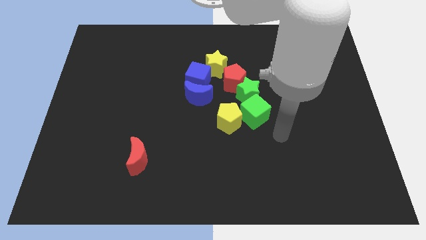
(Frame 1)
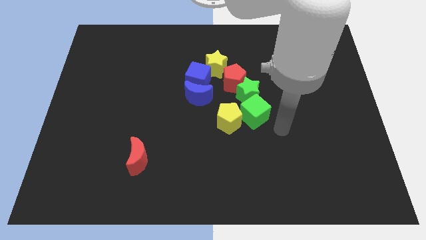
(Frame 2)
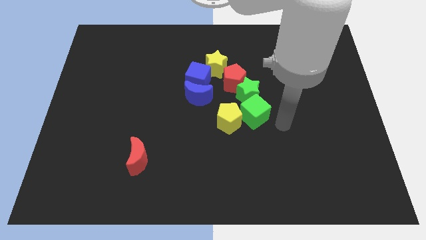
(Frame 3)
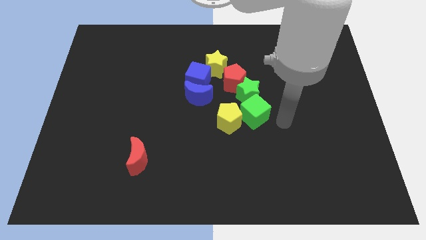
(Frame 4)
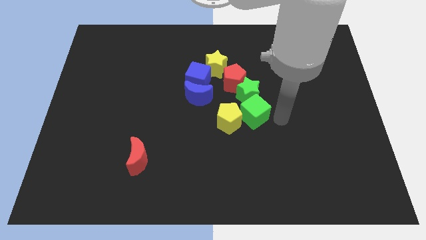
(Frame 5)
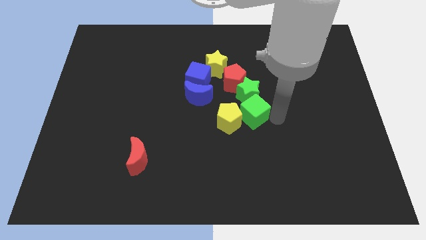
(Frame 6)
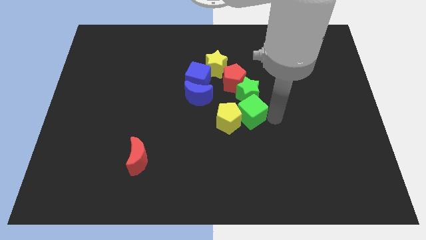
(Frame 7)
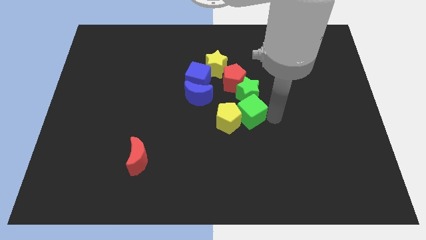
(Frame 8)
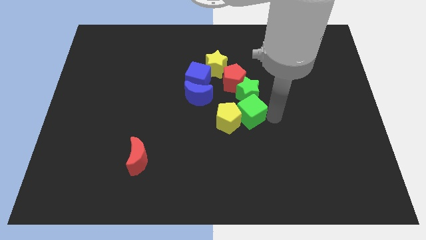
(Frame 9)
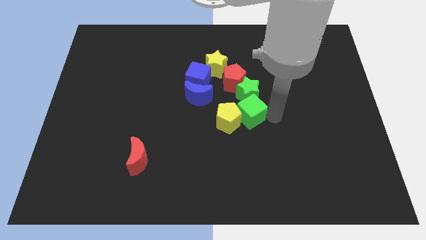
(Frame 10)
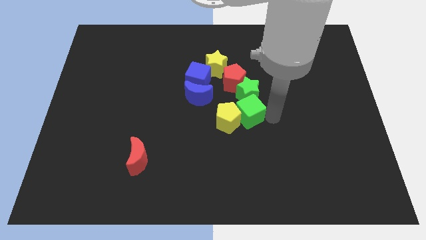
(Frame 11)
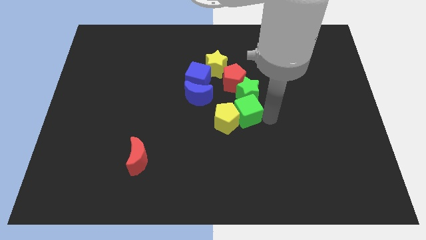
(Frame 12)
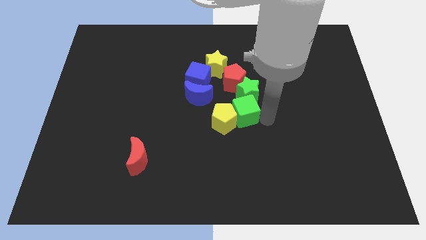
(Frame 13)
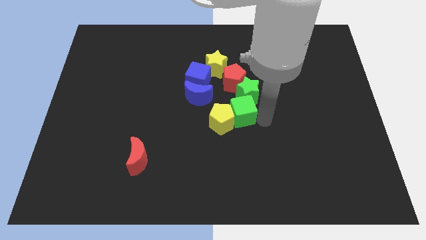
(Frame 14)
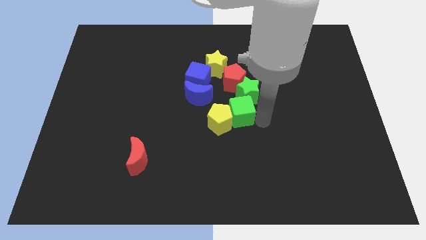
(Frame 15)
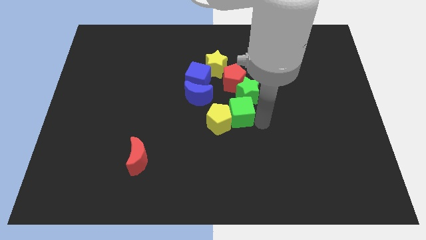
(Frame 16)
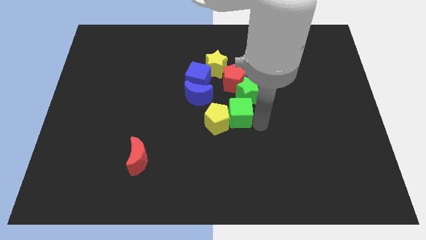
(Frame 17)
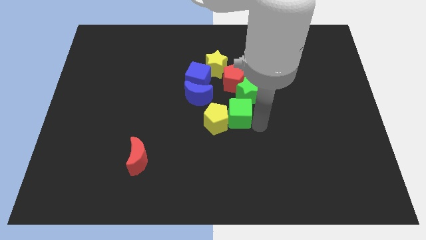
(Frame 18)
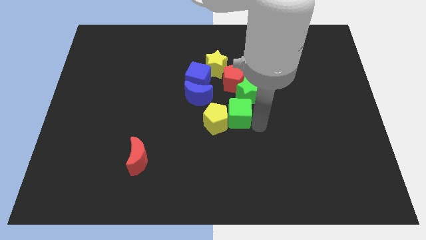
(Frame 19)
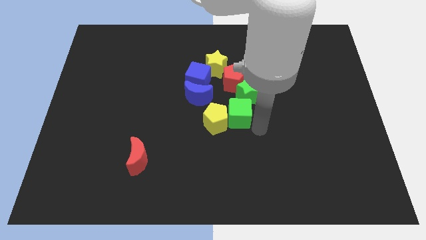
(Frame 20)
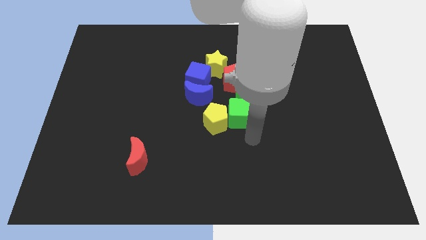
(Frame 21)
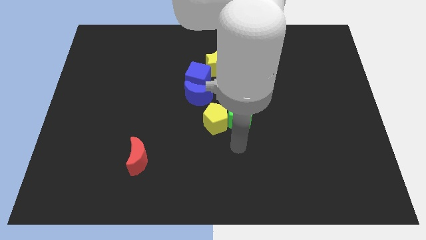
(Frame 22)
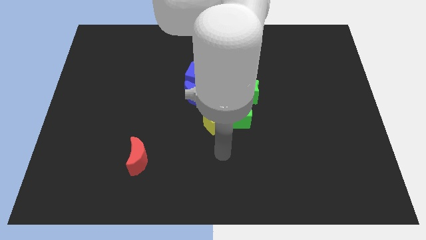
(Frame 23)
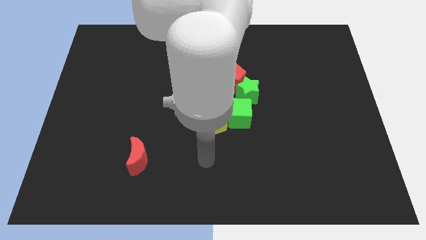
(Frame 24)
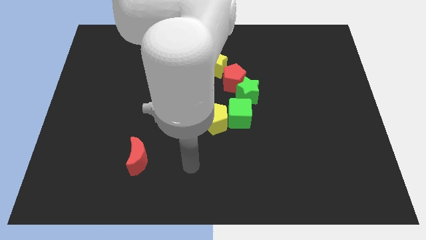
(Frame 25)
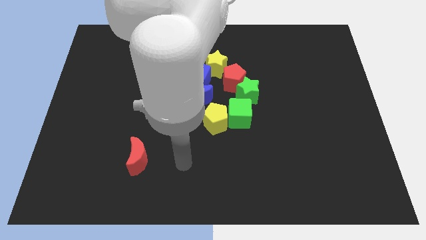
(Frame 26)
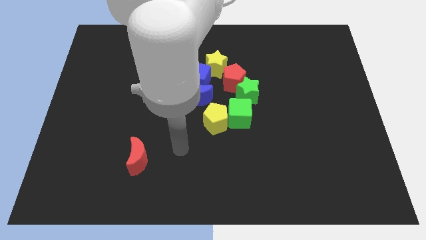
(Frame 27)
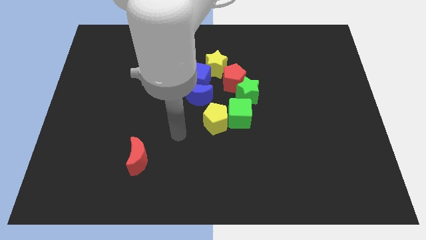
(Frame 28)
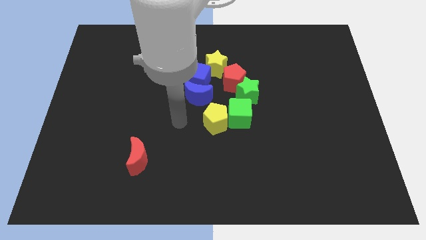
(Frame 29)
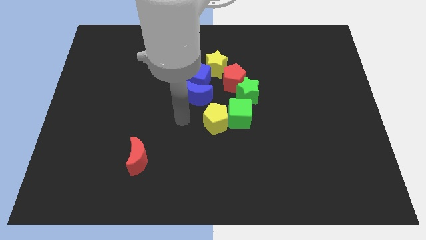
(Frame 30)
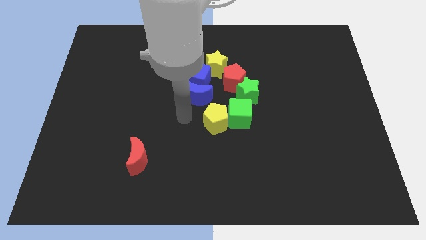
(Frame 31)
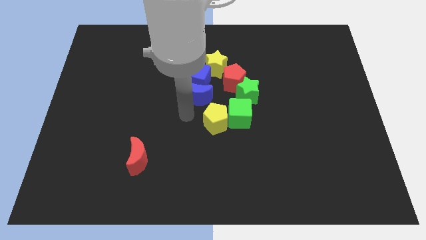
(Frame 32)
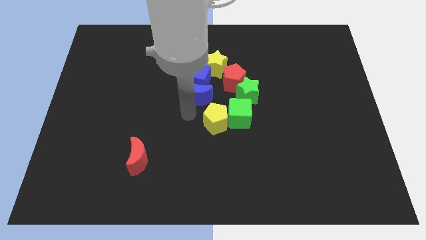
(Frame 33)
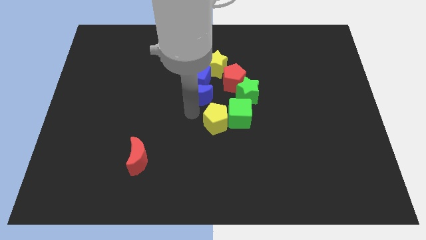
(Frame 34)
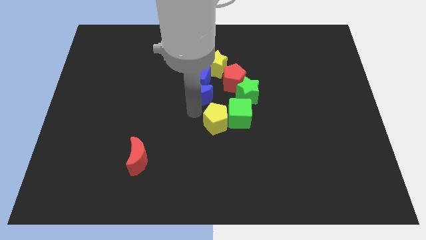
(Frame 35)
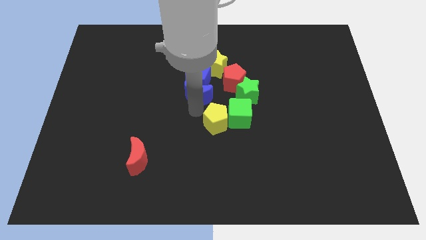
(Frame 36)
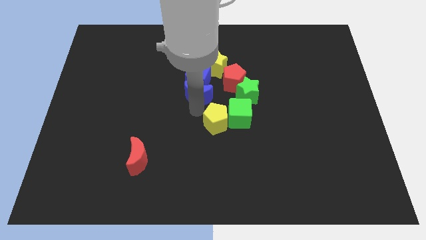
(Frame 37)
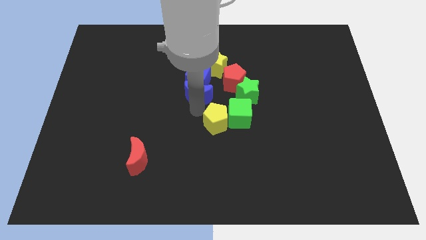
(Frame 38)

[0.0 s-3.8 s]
push green cube in to yellow pentagon

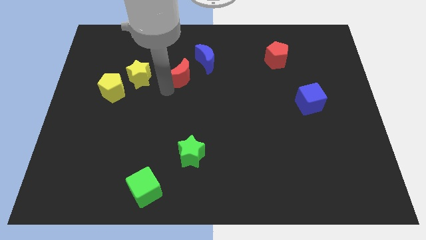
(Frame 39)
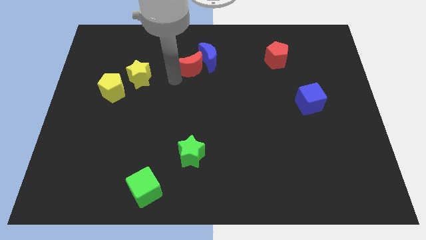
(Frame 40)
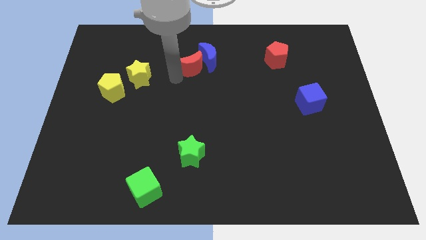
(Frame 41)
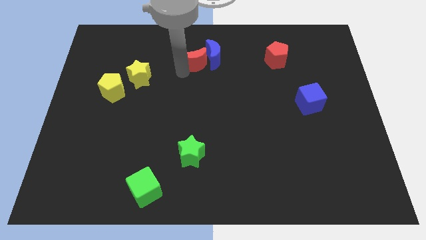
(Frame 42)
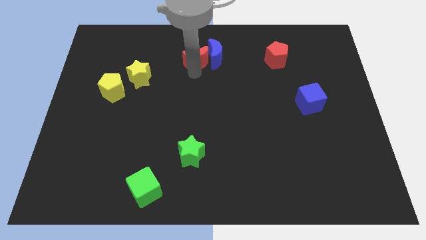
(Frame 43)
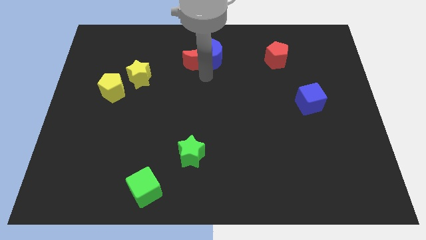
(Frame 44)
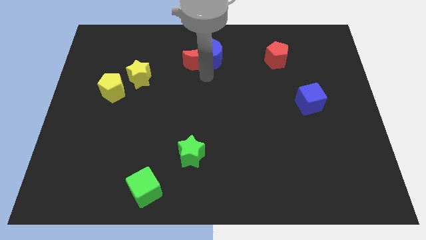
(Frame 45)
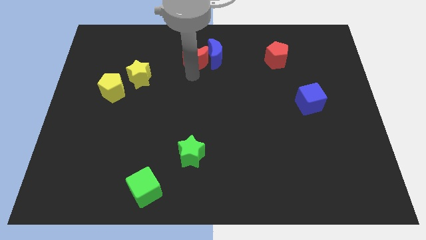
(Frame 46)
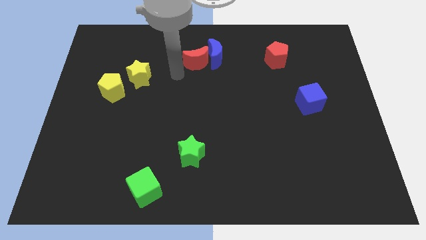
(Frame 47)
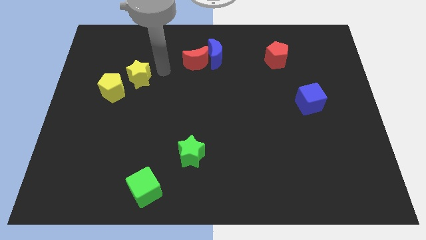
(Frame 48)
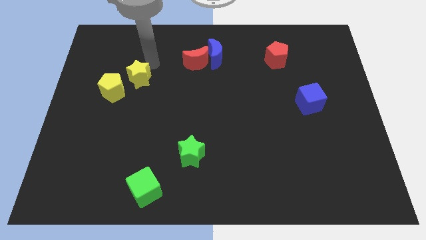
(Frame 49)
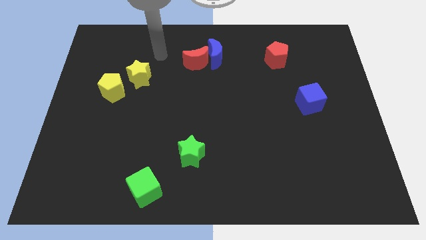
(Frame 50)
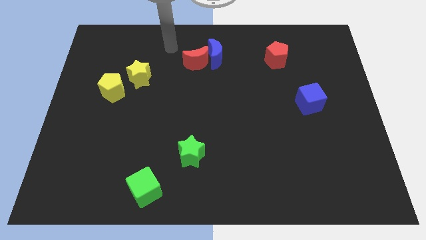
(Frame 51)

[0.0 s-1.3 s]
drag the red crescent into the blue crescent

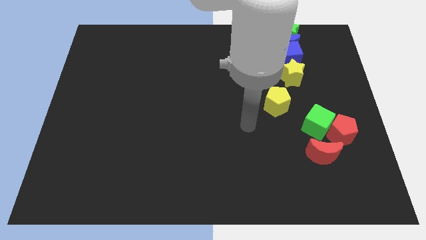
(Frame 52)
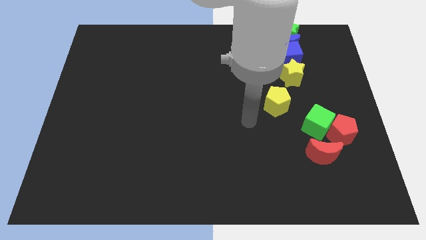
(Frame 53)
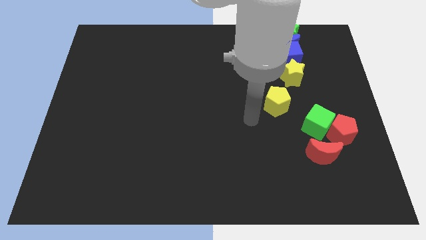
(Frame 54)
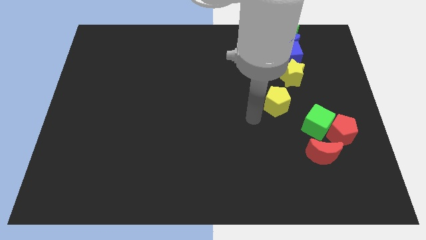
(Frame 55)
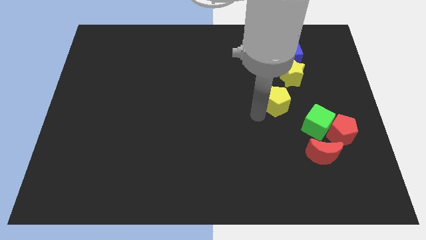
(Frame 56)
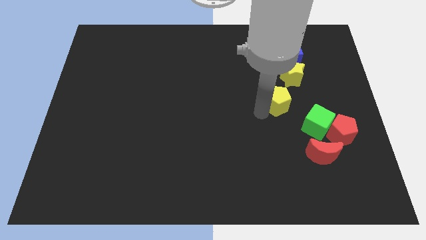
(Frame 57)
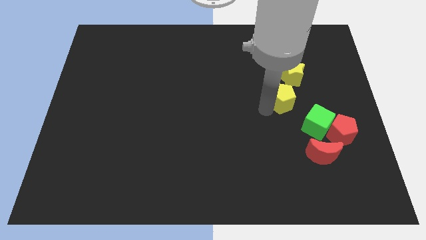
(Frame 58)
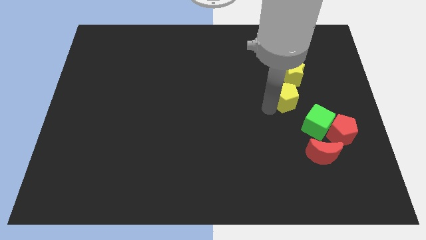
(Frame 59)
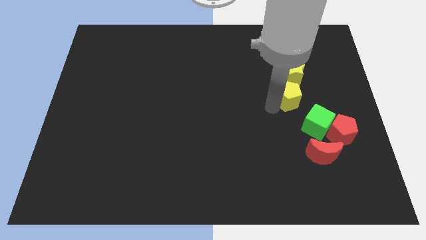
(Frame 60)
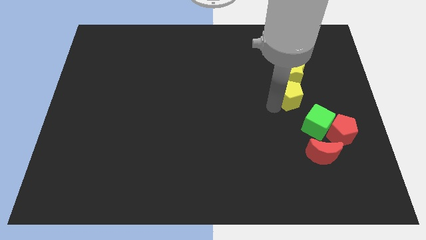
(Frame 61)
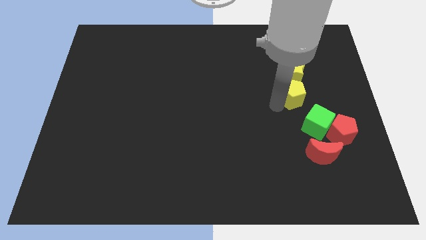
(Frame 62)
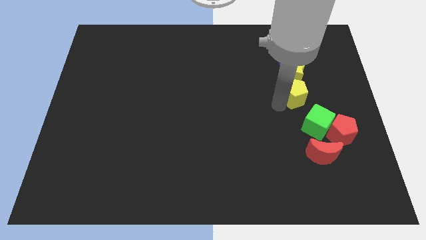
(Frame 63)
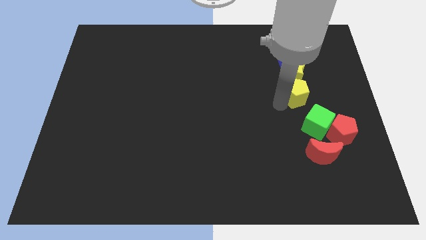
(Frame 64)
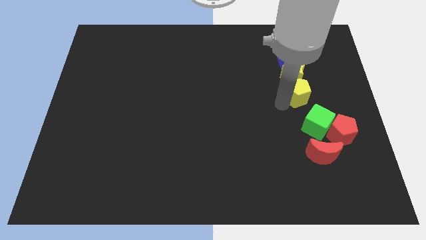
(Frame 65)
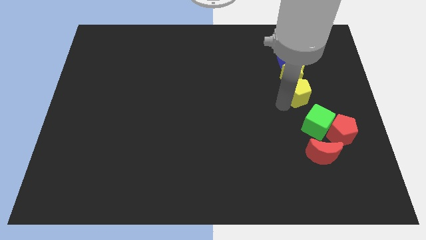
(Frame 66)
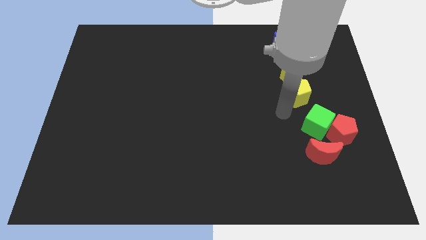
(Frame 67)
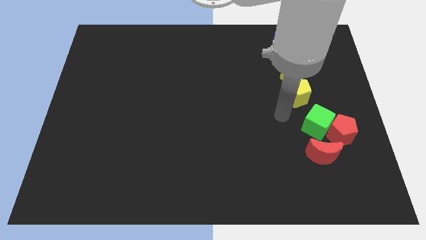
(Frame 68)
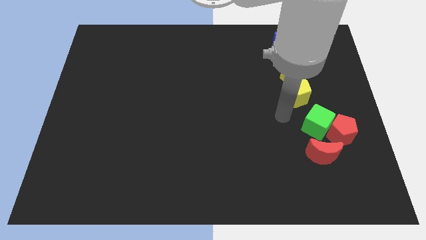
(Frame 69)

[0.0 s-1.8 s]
move the yellow pentagon to the bottom of the yellow star

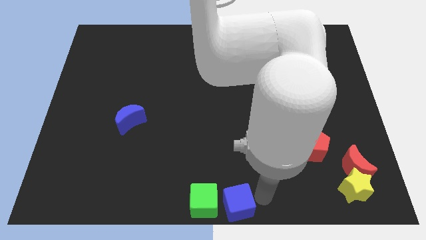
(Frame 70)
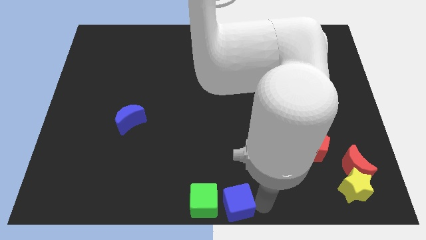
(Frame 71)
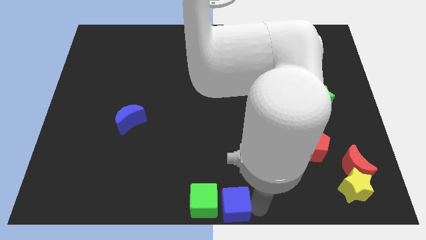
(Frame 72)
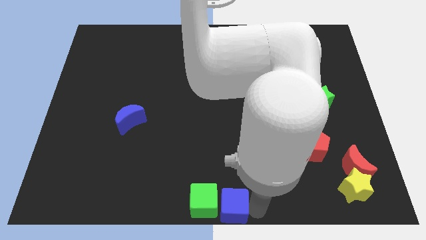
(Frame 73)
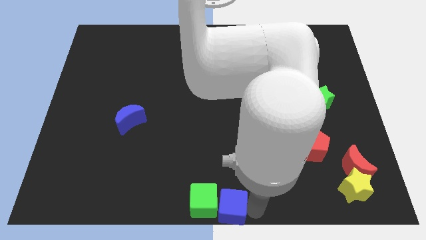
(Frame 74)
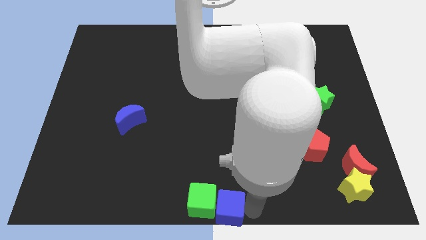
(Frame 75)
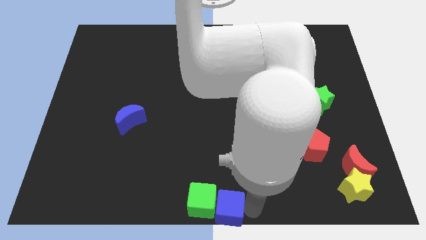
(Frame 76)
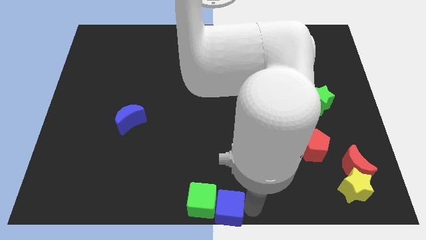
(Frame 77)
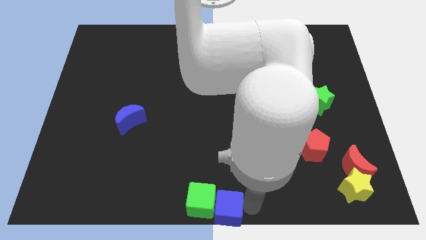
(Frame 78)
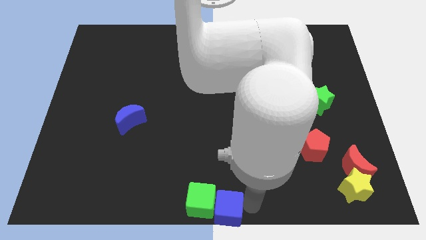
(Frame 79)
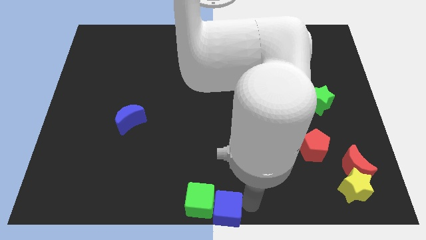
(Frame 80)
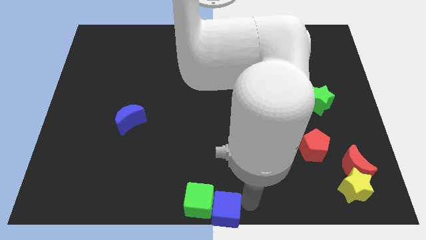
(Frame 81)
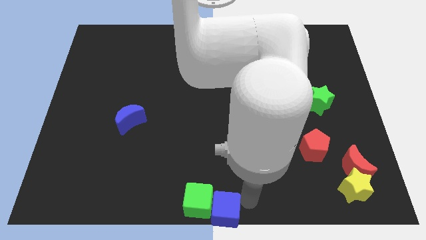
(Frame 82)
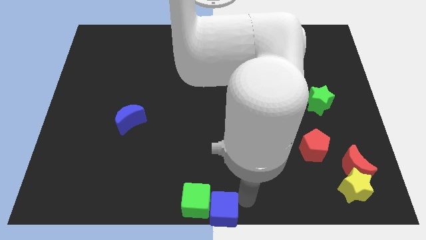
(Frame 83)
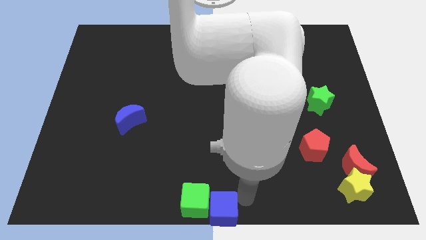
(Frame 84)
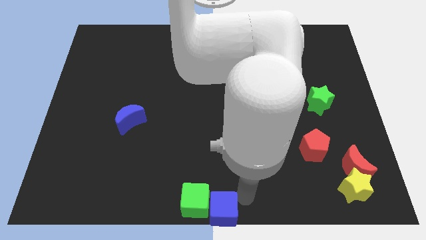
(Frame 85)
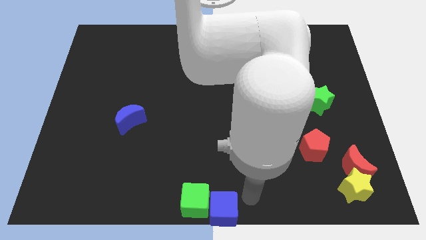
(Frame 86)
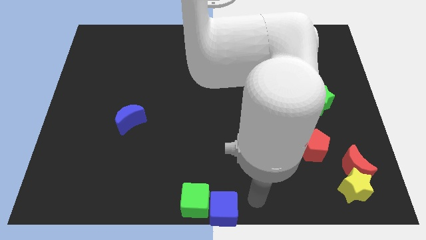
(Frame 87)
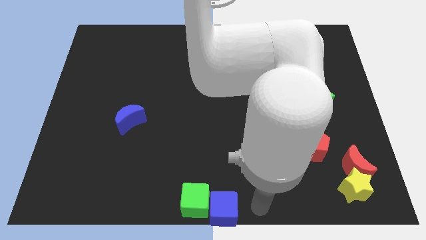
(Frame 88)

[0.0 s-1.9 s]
push the blue cube into green cube
